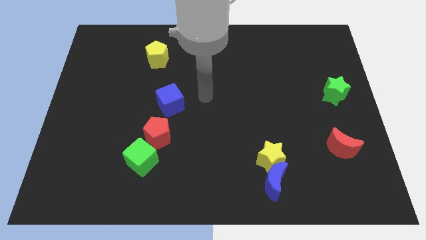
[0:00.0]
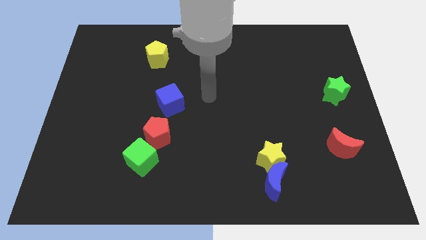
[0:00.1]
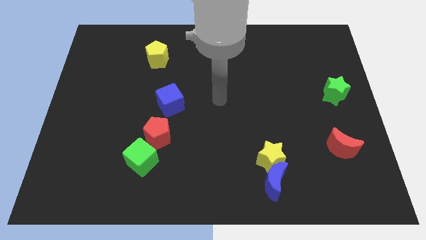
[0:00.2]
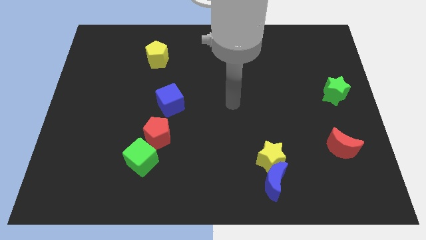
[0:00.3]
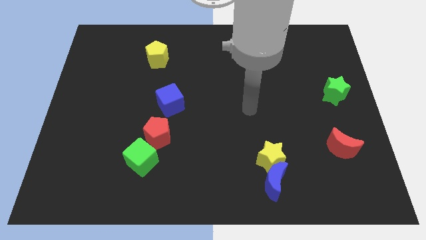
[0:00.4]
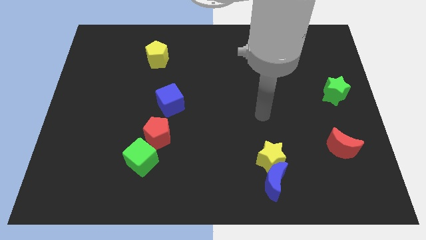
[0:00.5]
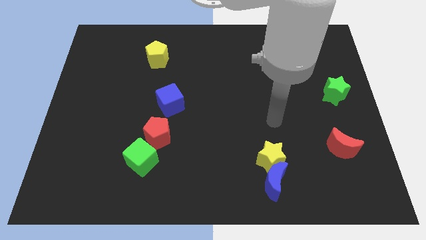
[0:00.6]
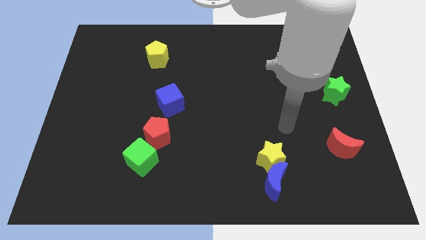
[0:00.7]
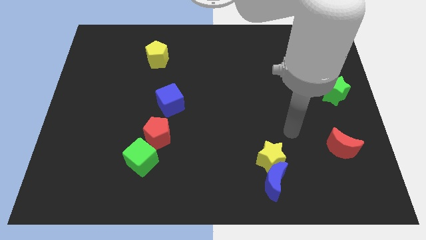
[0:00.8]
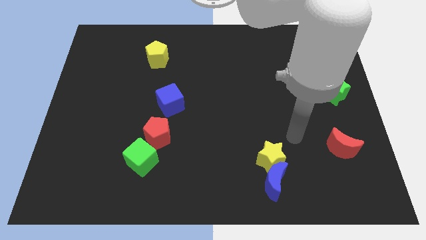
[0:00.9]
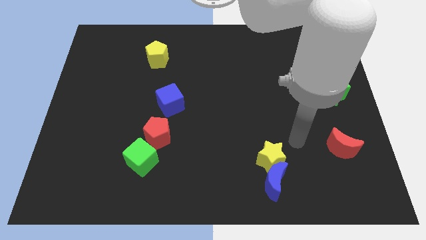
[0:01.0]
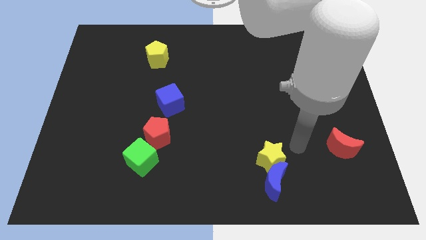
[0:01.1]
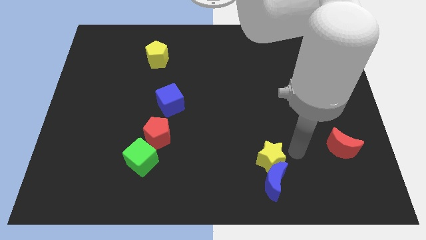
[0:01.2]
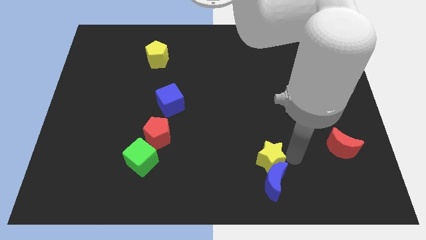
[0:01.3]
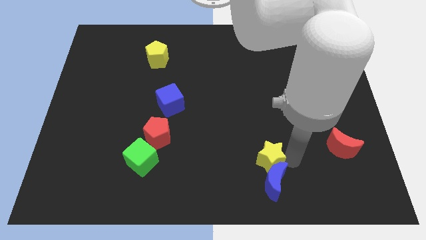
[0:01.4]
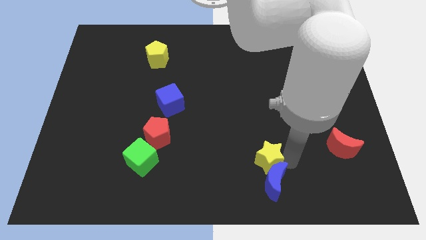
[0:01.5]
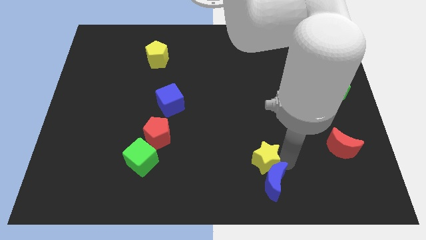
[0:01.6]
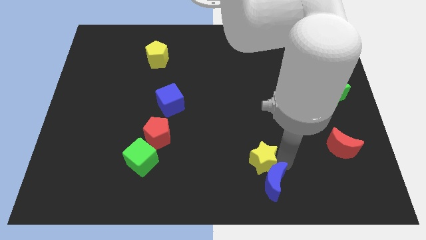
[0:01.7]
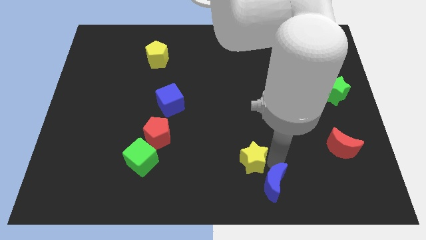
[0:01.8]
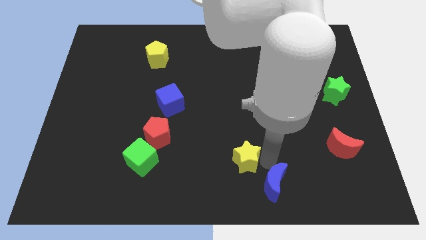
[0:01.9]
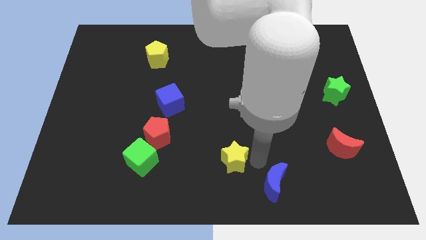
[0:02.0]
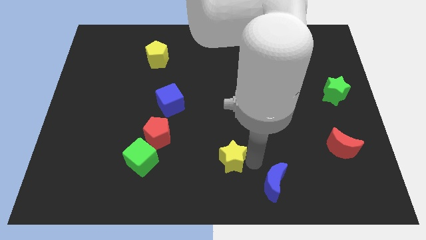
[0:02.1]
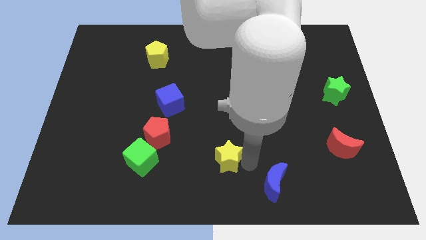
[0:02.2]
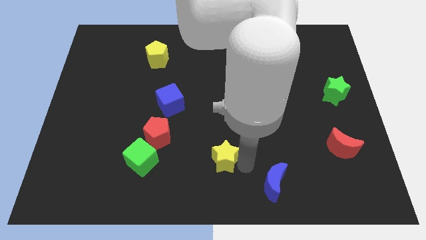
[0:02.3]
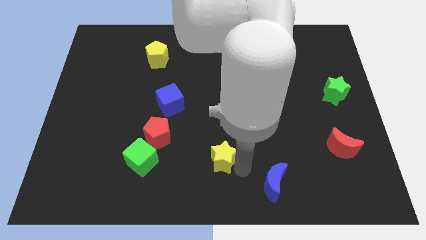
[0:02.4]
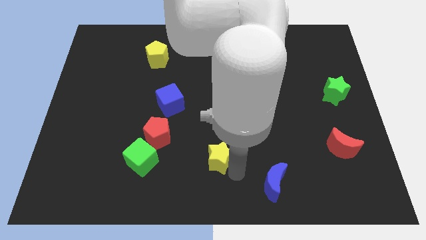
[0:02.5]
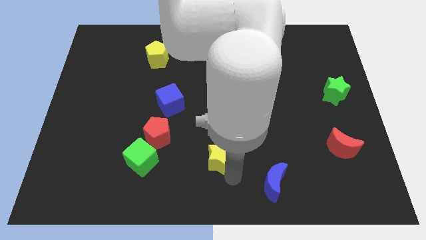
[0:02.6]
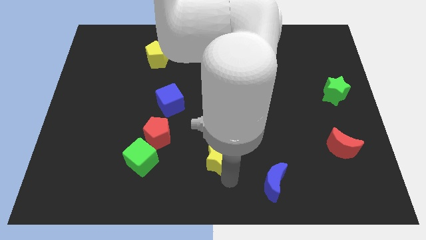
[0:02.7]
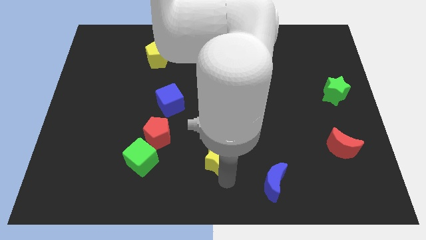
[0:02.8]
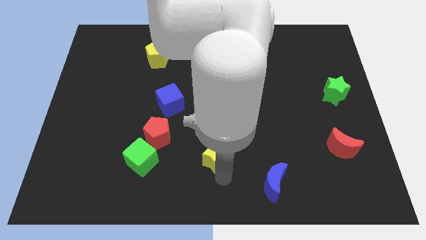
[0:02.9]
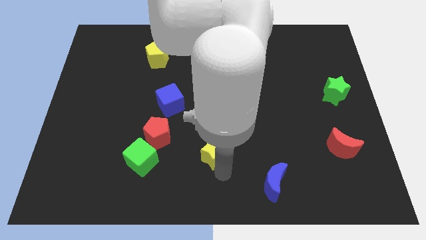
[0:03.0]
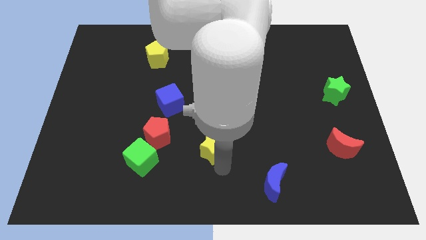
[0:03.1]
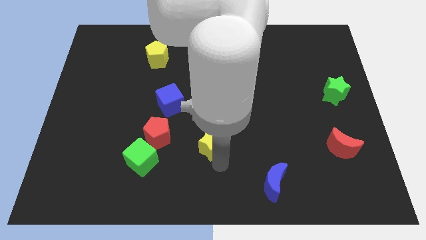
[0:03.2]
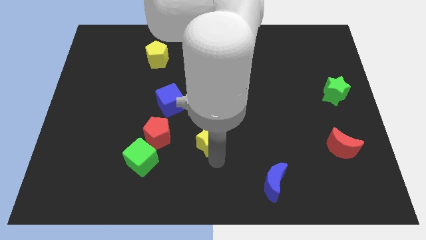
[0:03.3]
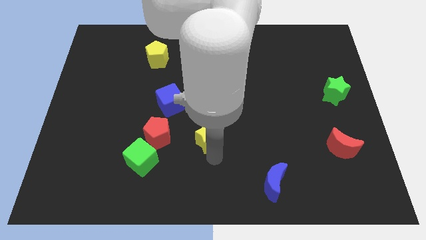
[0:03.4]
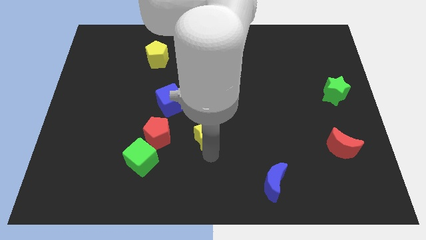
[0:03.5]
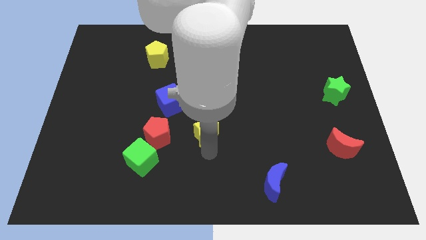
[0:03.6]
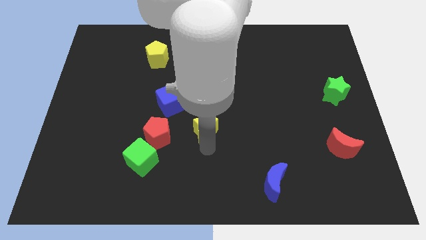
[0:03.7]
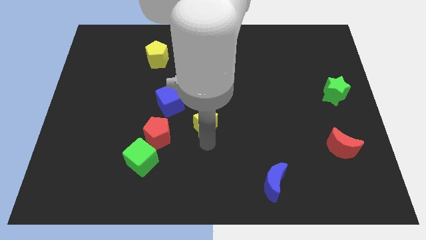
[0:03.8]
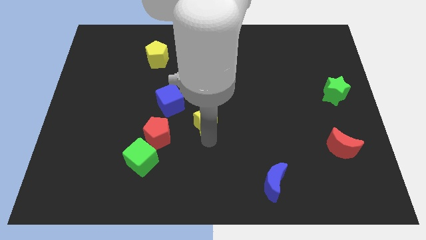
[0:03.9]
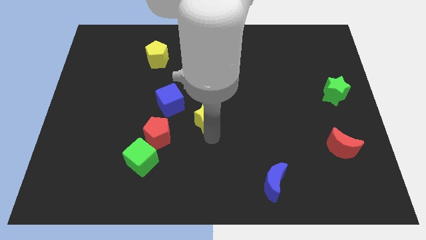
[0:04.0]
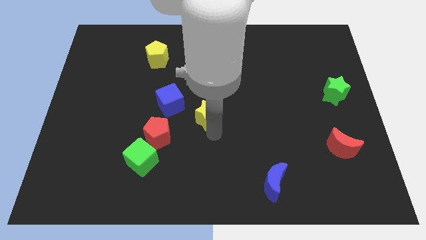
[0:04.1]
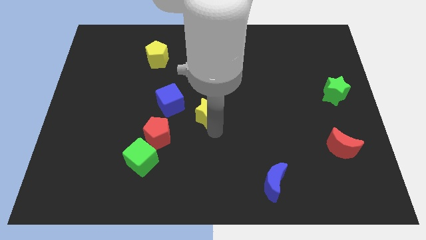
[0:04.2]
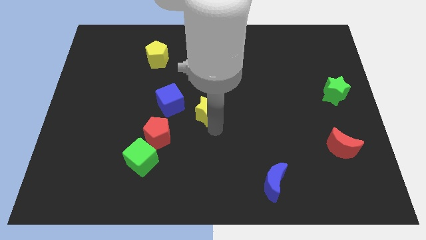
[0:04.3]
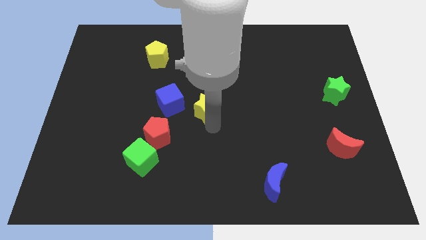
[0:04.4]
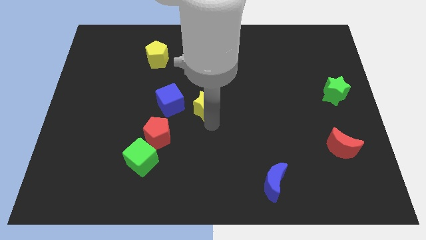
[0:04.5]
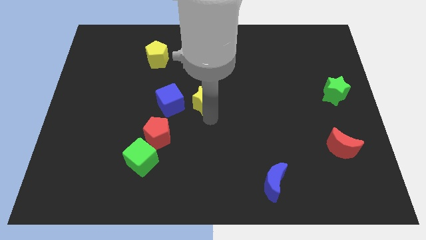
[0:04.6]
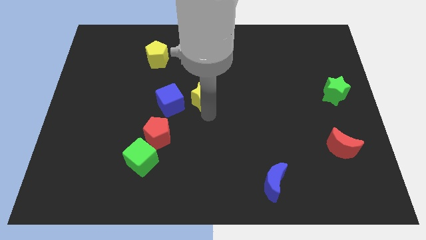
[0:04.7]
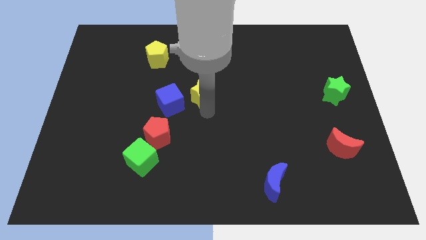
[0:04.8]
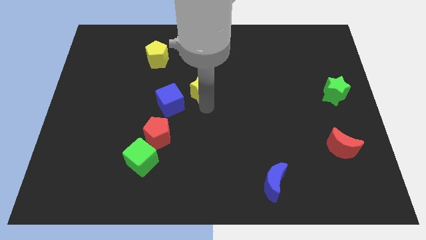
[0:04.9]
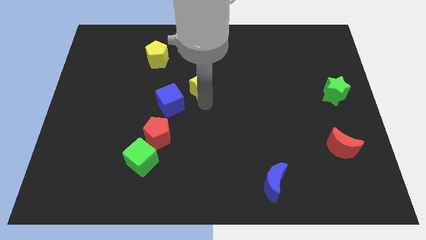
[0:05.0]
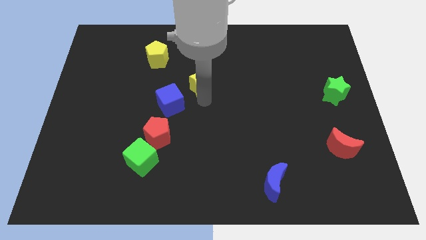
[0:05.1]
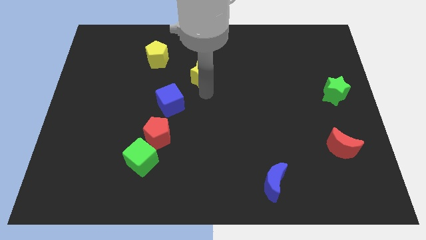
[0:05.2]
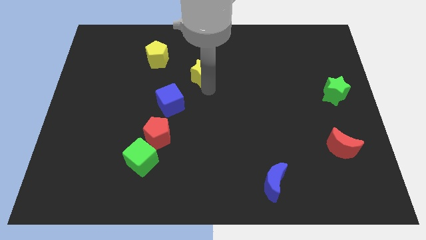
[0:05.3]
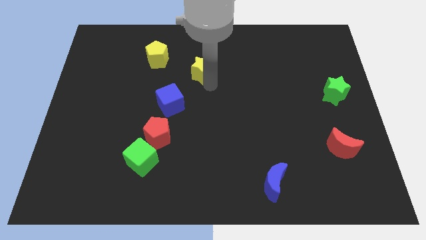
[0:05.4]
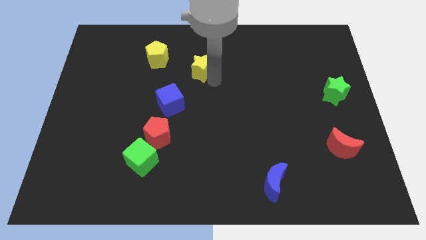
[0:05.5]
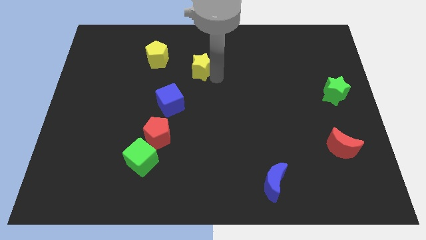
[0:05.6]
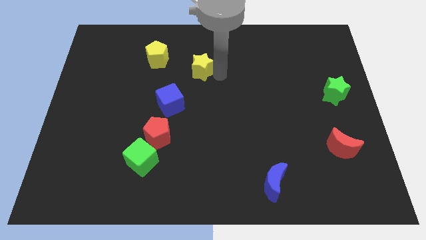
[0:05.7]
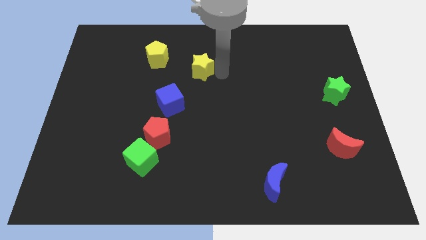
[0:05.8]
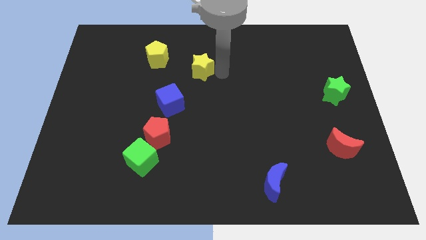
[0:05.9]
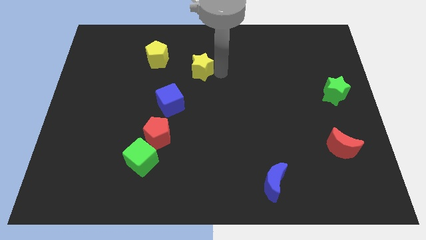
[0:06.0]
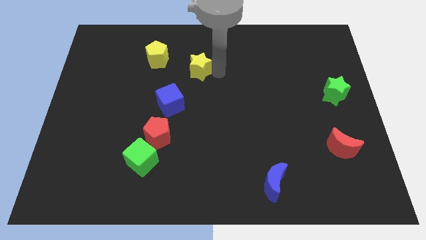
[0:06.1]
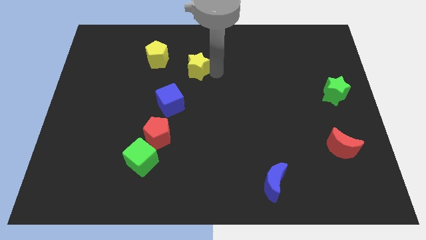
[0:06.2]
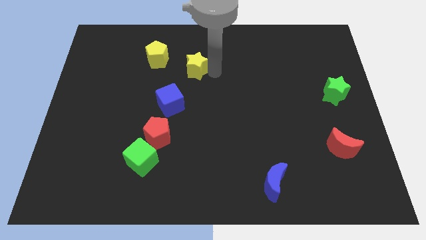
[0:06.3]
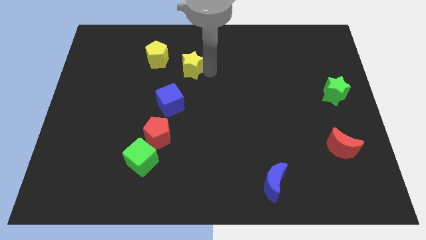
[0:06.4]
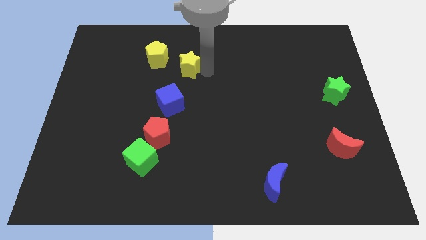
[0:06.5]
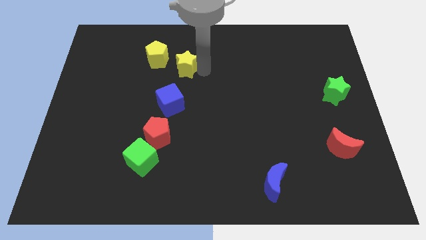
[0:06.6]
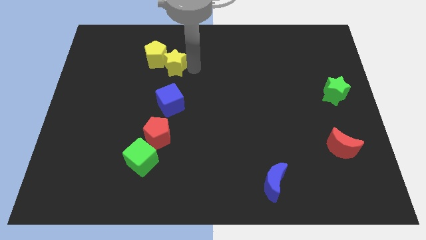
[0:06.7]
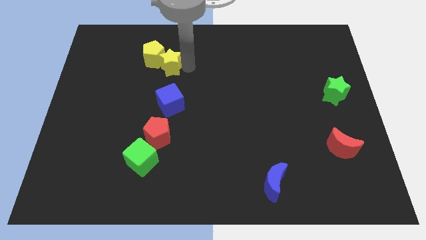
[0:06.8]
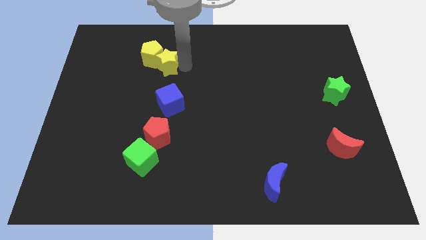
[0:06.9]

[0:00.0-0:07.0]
push the yellow star close to the yellow pentagon

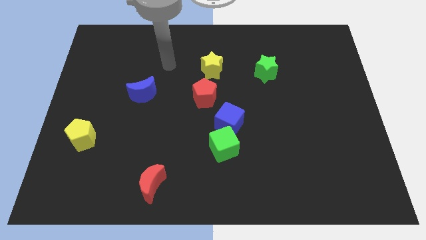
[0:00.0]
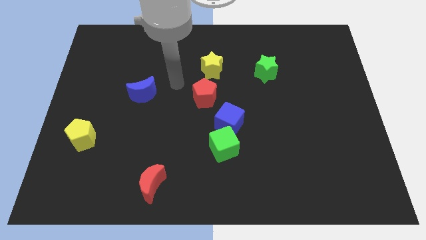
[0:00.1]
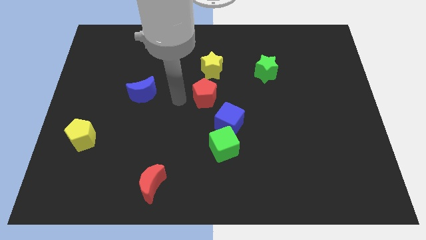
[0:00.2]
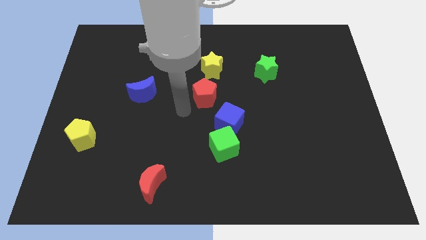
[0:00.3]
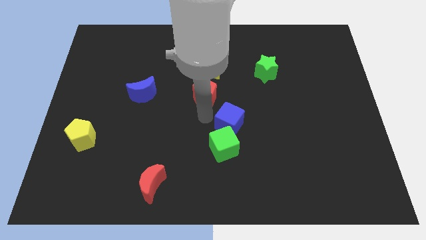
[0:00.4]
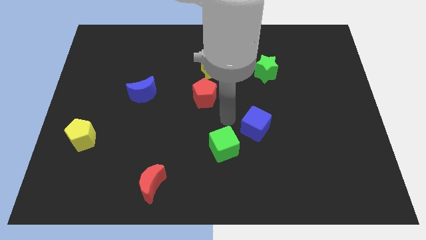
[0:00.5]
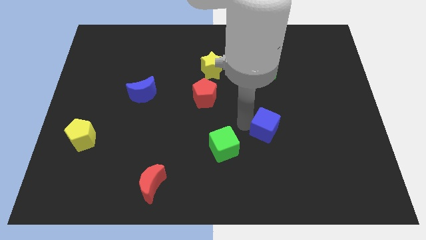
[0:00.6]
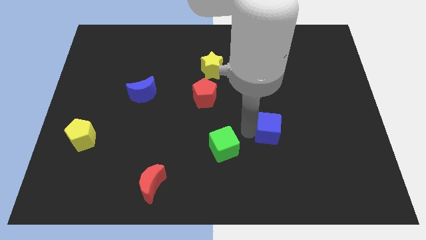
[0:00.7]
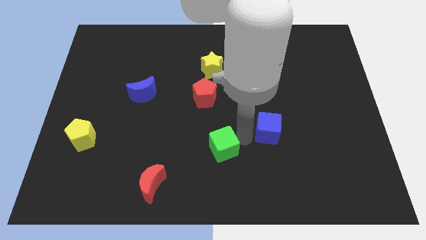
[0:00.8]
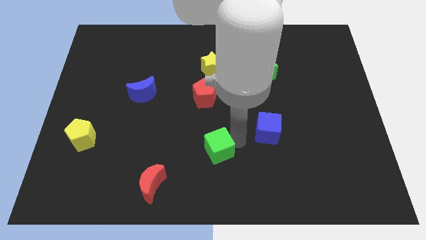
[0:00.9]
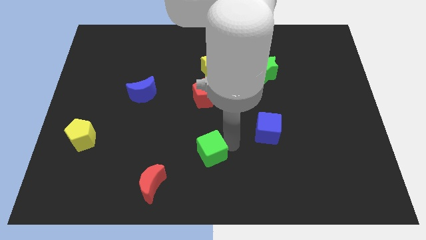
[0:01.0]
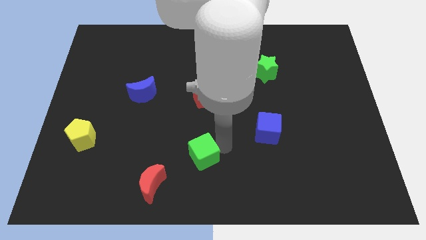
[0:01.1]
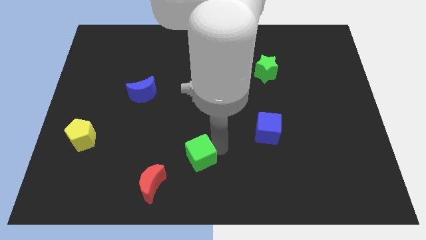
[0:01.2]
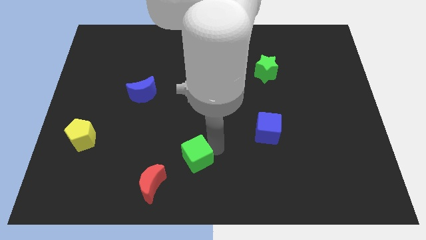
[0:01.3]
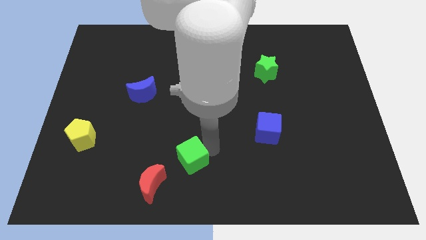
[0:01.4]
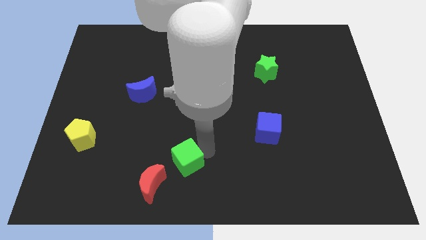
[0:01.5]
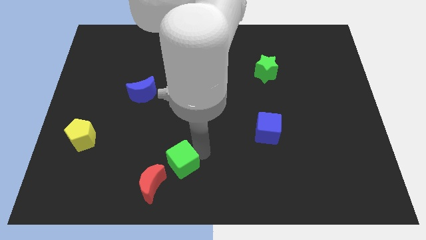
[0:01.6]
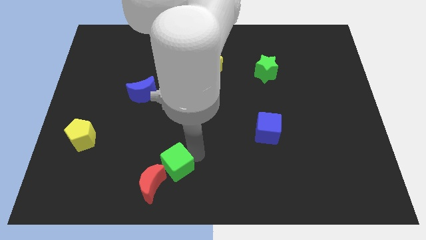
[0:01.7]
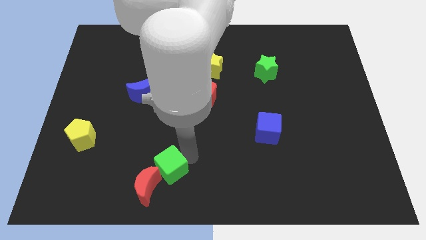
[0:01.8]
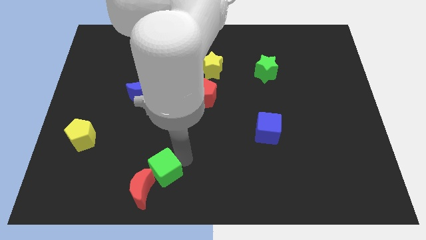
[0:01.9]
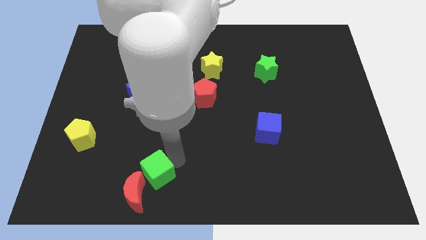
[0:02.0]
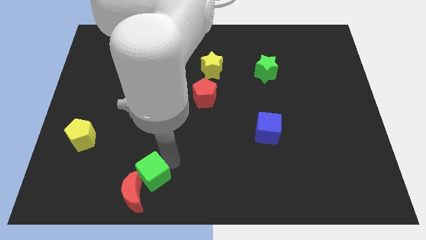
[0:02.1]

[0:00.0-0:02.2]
push the green cube close to the red moon
